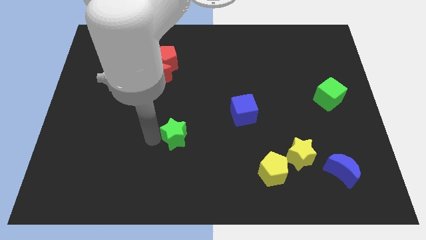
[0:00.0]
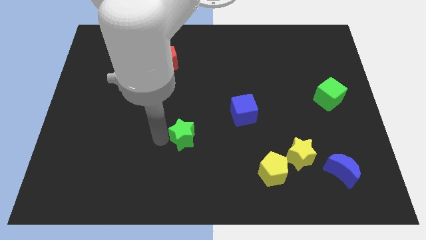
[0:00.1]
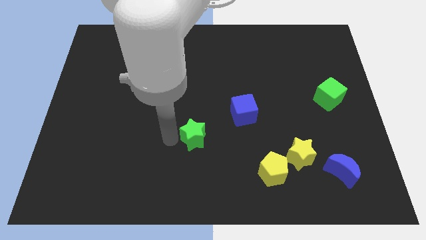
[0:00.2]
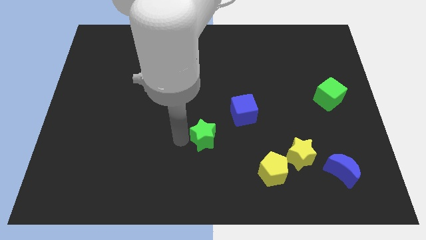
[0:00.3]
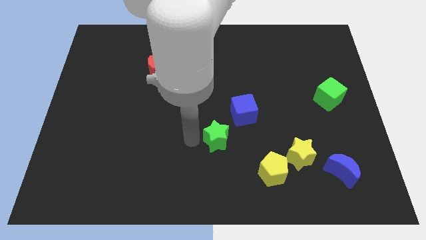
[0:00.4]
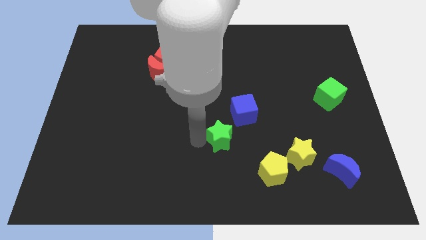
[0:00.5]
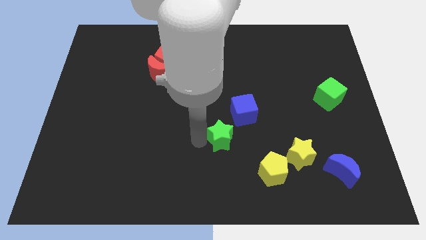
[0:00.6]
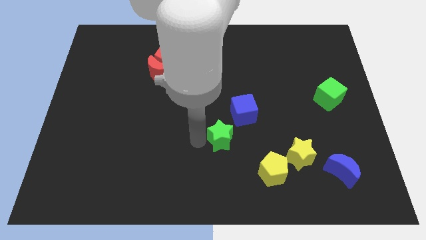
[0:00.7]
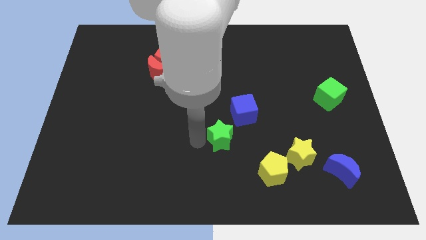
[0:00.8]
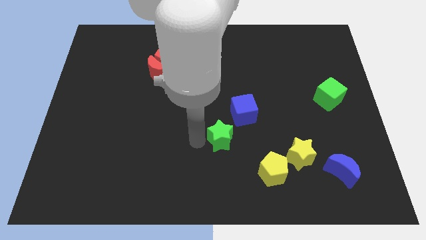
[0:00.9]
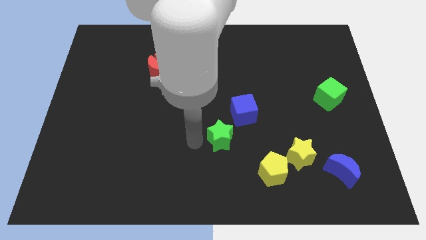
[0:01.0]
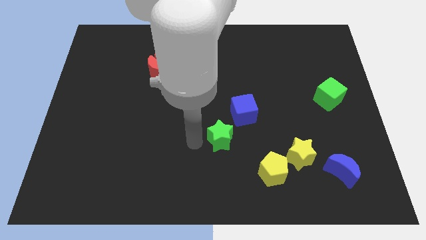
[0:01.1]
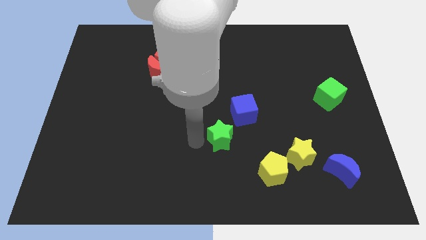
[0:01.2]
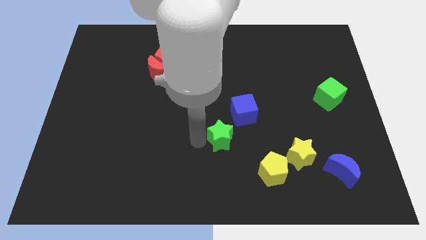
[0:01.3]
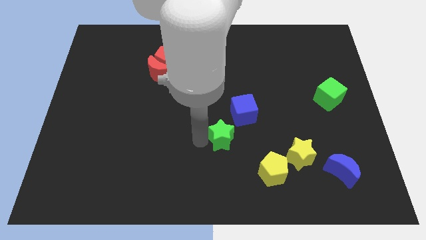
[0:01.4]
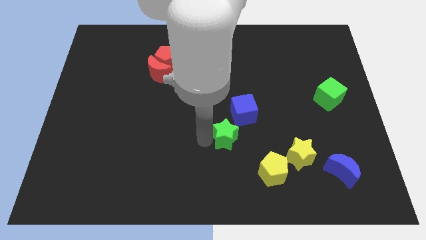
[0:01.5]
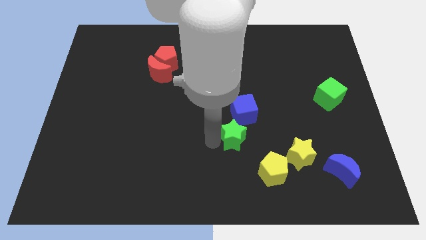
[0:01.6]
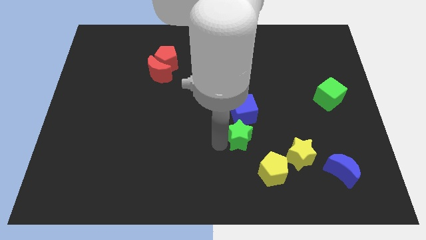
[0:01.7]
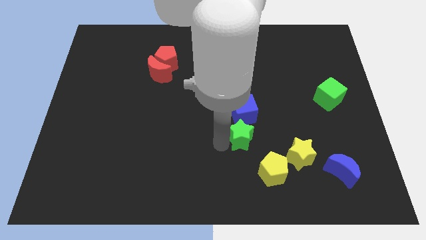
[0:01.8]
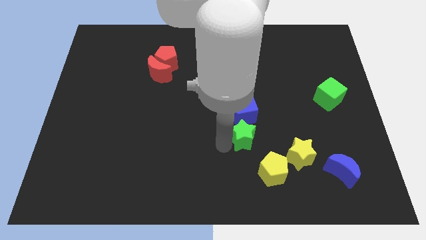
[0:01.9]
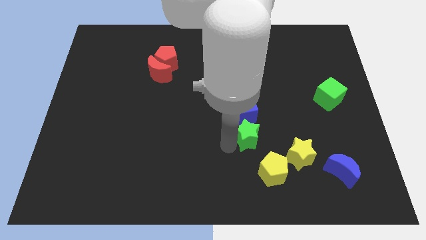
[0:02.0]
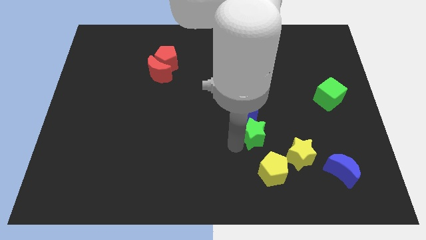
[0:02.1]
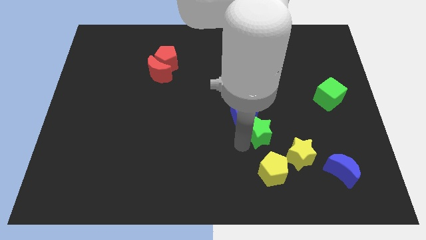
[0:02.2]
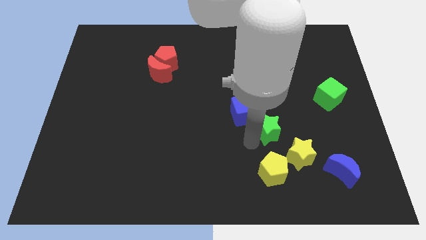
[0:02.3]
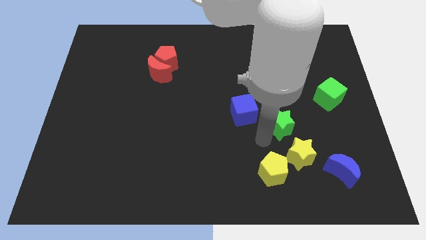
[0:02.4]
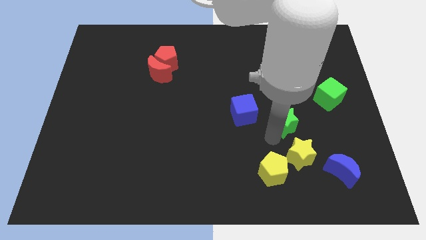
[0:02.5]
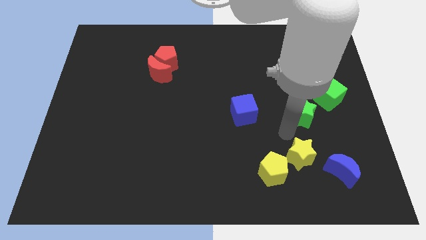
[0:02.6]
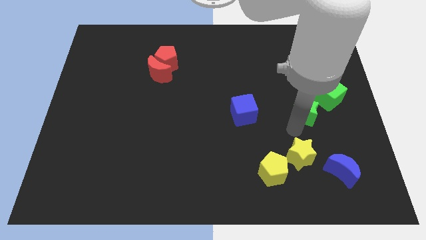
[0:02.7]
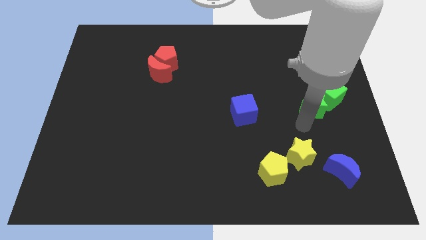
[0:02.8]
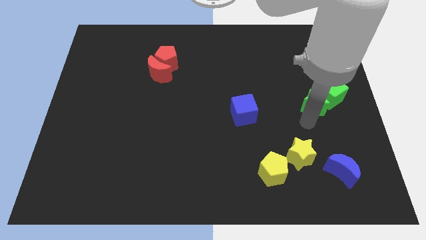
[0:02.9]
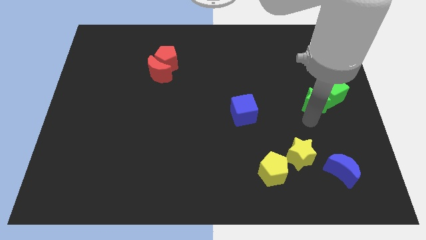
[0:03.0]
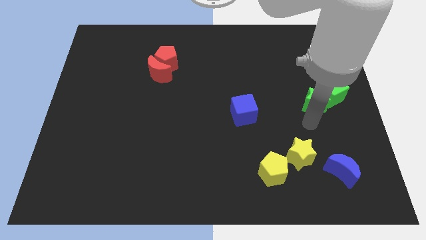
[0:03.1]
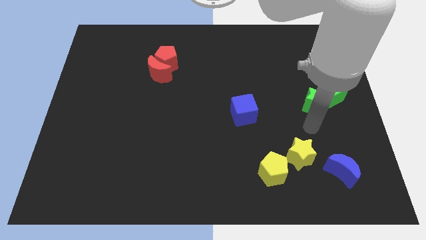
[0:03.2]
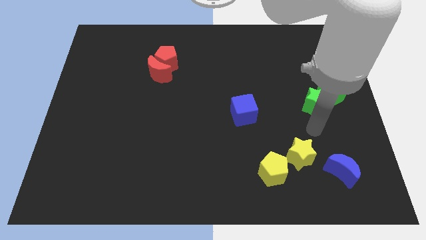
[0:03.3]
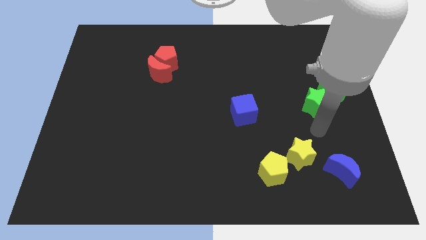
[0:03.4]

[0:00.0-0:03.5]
push the green star into green cube

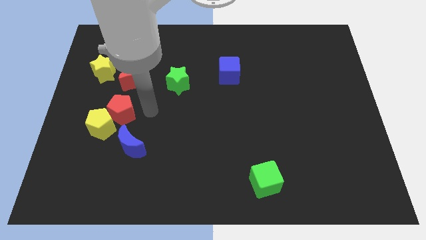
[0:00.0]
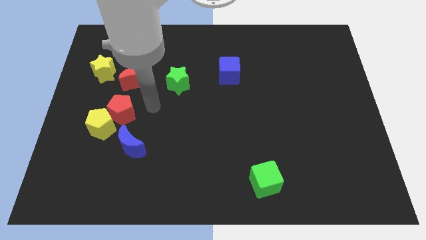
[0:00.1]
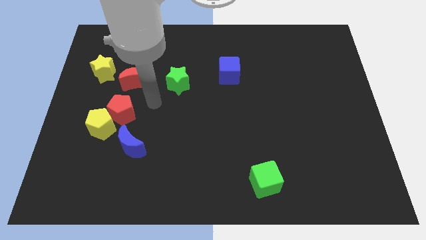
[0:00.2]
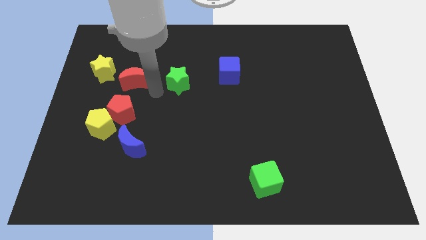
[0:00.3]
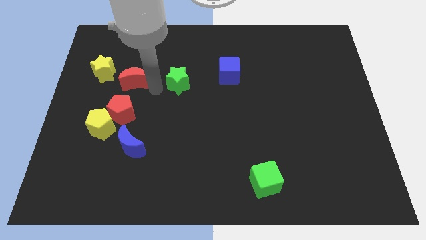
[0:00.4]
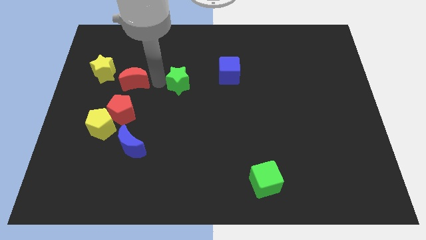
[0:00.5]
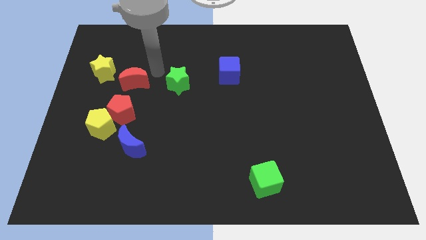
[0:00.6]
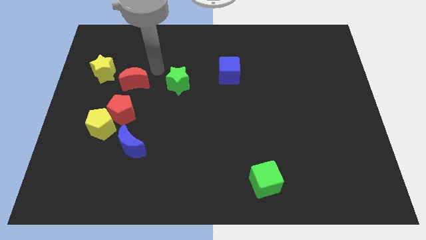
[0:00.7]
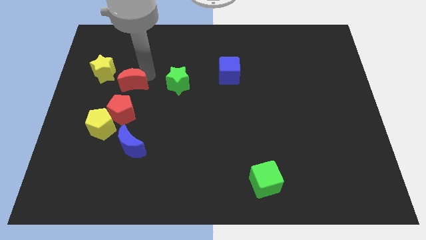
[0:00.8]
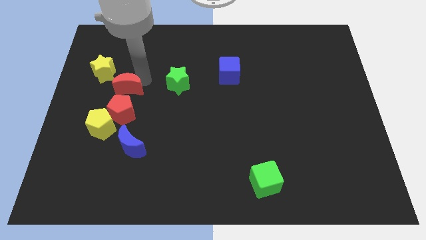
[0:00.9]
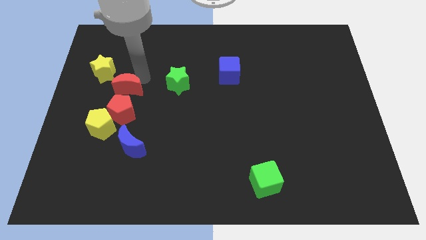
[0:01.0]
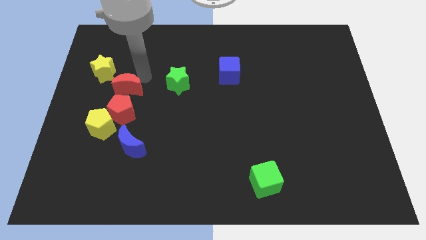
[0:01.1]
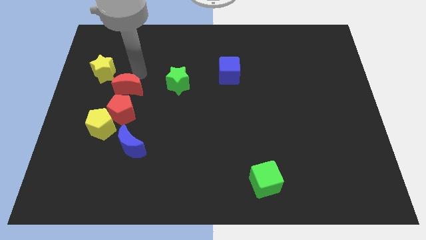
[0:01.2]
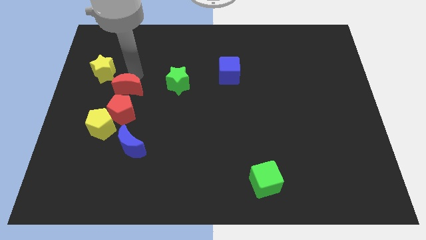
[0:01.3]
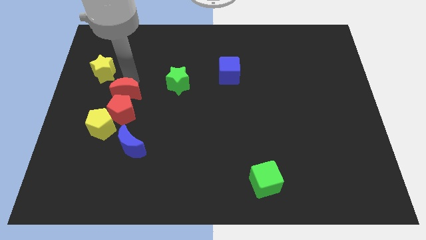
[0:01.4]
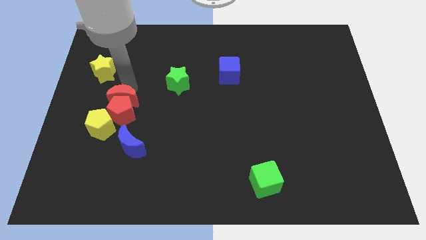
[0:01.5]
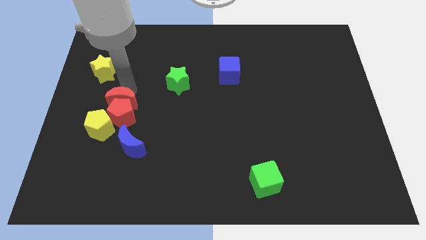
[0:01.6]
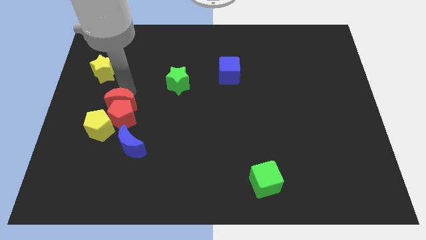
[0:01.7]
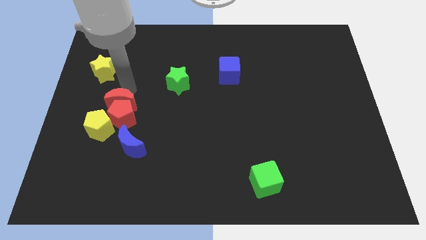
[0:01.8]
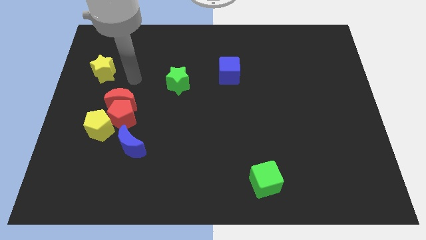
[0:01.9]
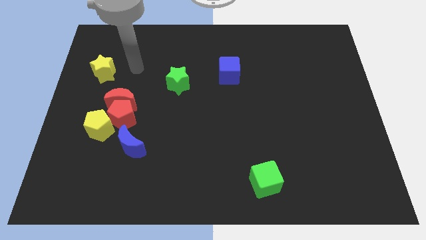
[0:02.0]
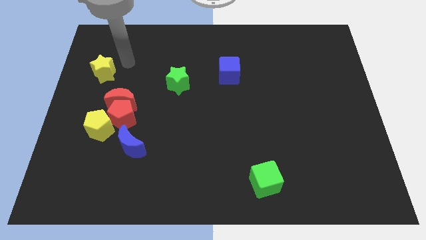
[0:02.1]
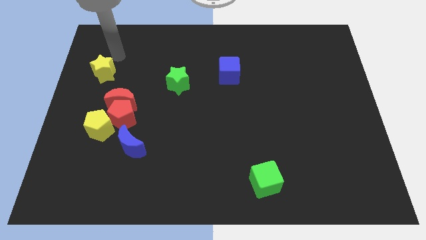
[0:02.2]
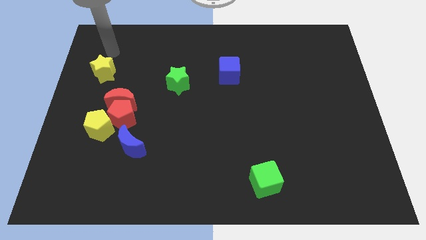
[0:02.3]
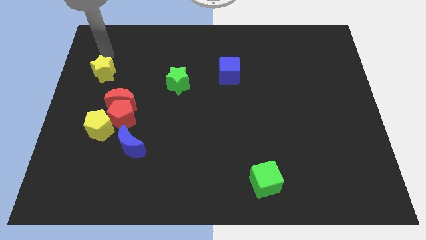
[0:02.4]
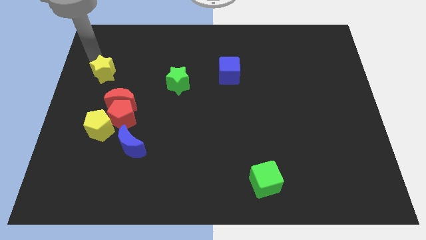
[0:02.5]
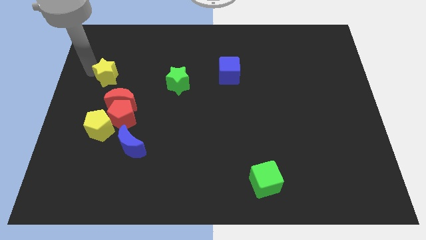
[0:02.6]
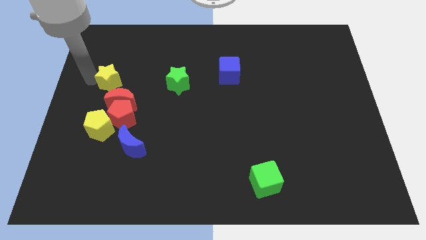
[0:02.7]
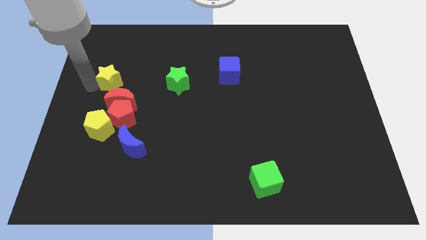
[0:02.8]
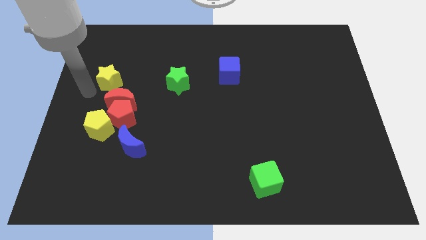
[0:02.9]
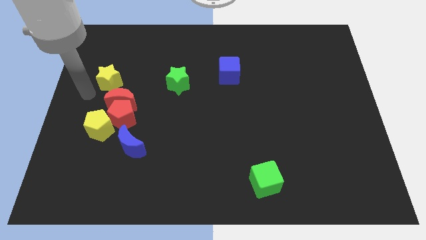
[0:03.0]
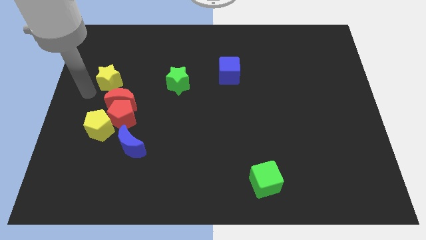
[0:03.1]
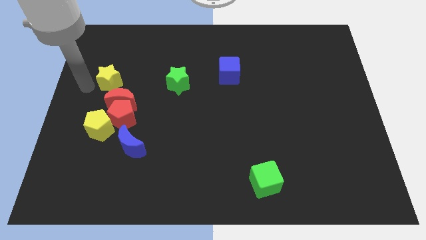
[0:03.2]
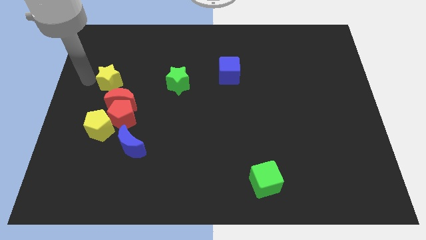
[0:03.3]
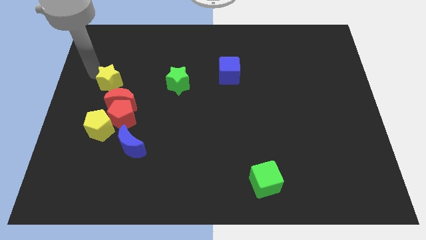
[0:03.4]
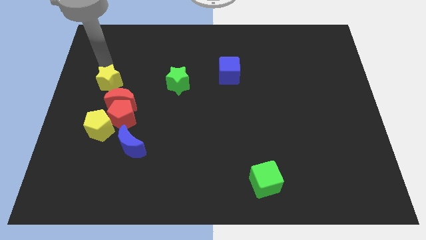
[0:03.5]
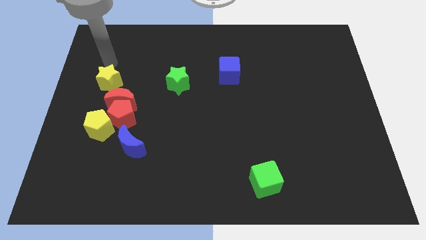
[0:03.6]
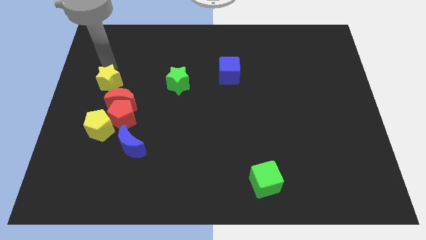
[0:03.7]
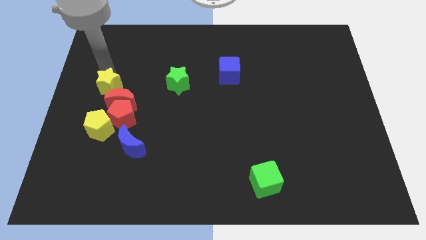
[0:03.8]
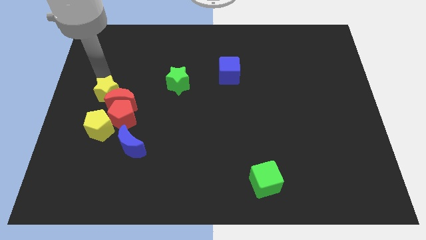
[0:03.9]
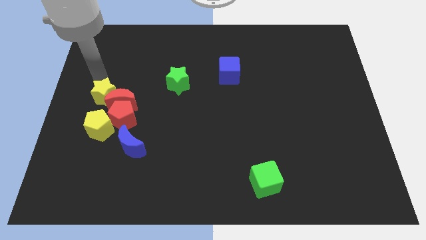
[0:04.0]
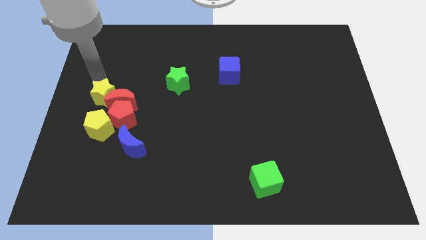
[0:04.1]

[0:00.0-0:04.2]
push the red crescent in to the red pentagon with the yellow star

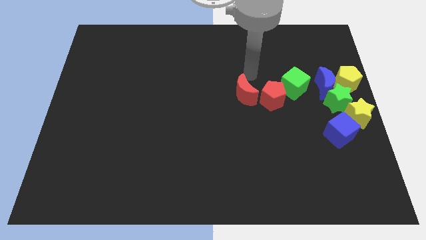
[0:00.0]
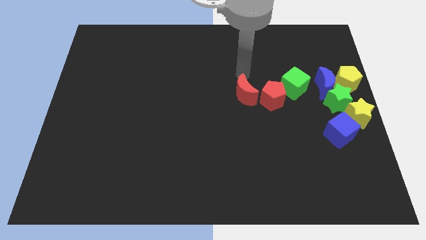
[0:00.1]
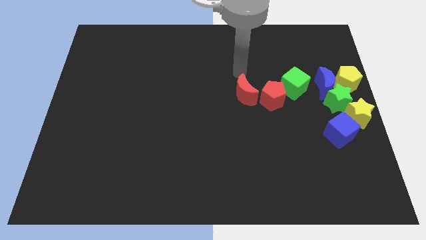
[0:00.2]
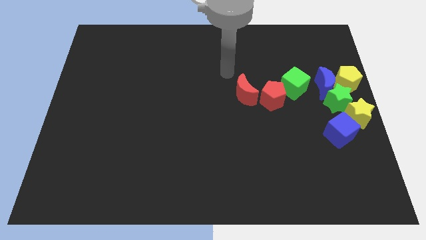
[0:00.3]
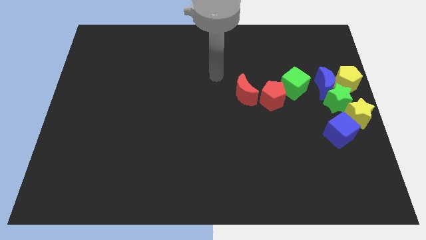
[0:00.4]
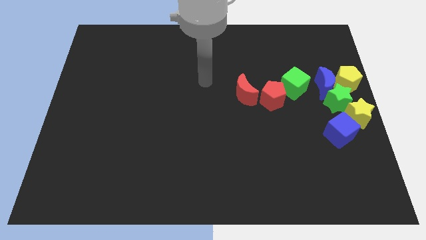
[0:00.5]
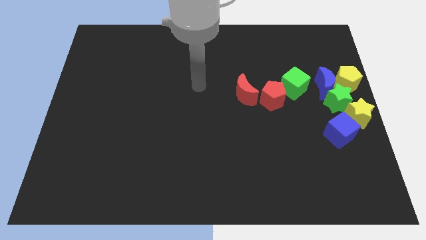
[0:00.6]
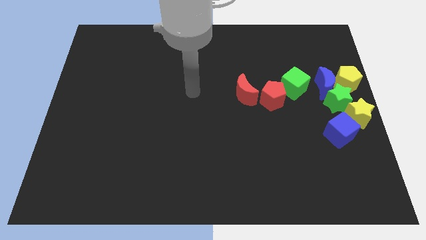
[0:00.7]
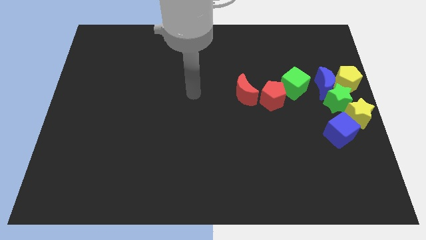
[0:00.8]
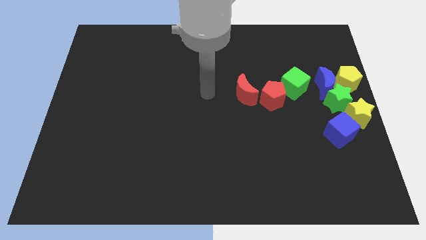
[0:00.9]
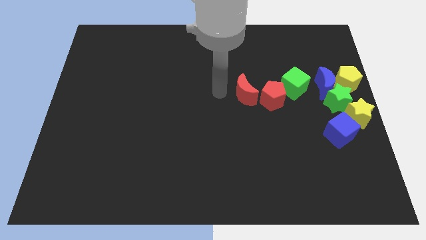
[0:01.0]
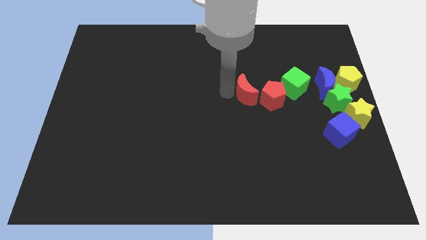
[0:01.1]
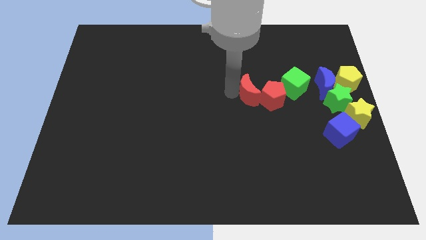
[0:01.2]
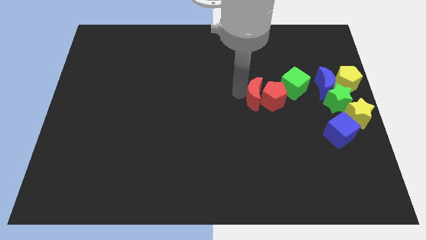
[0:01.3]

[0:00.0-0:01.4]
move the crescent into the red pentagon
